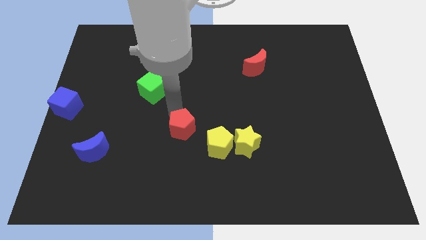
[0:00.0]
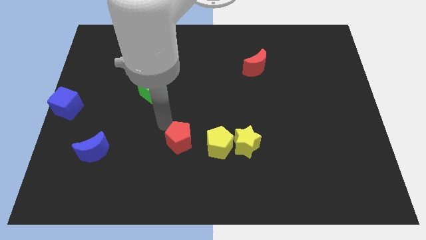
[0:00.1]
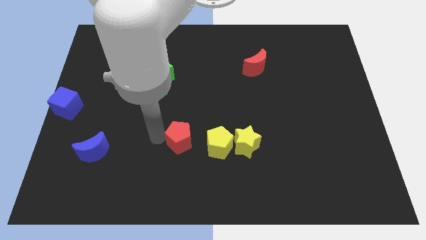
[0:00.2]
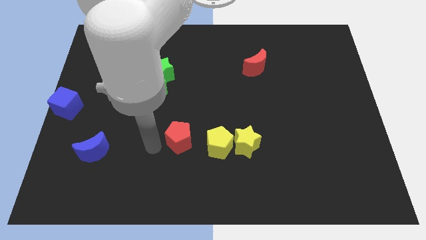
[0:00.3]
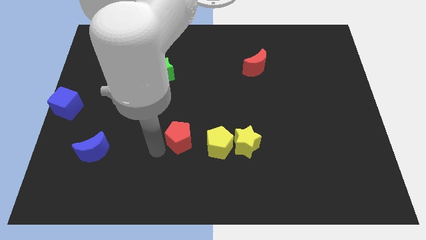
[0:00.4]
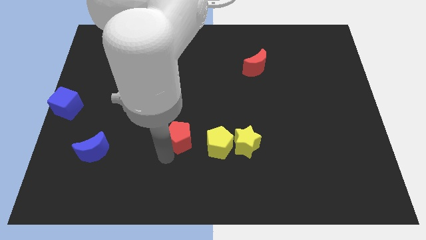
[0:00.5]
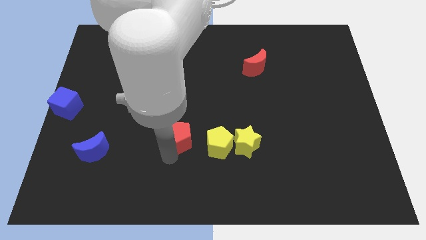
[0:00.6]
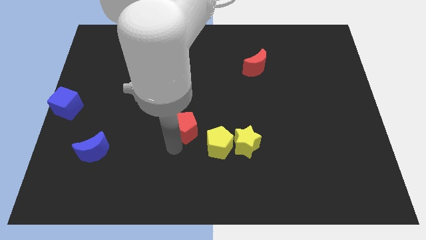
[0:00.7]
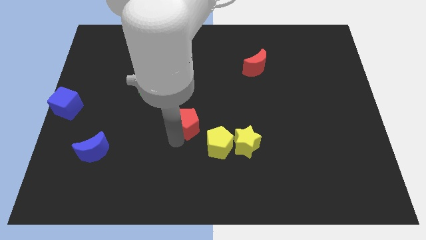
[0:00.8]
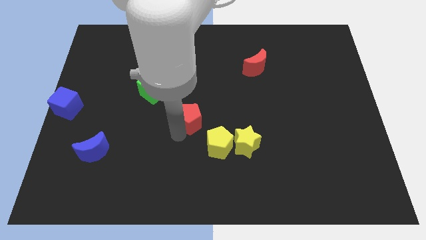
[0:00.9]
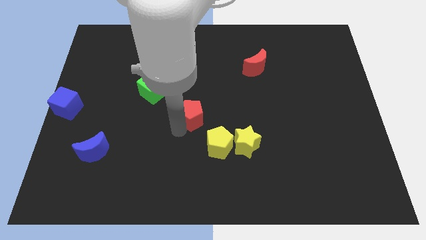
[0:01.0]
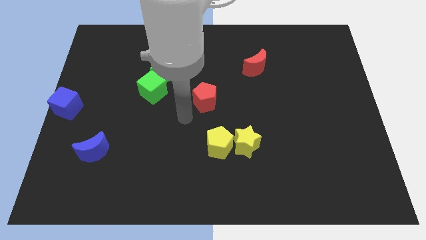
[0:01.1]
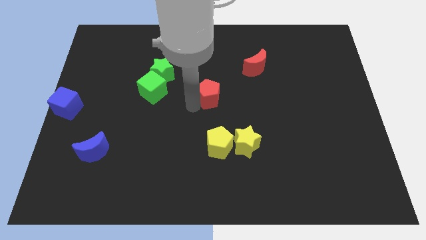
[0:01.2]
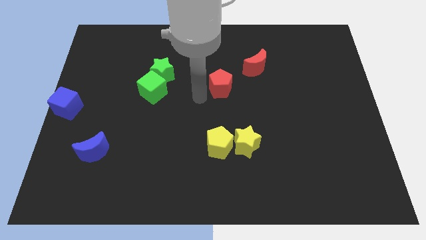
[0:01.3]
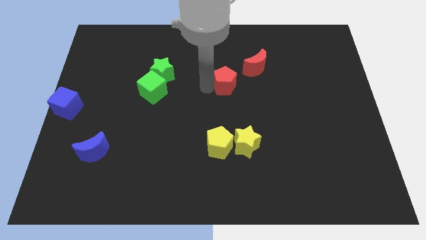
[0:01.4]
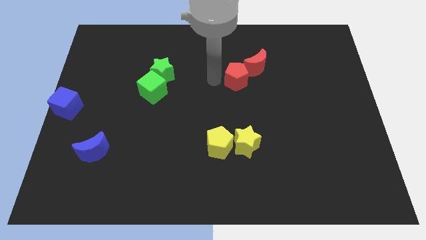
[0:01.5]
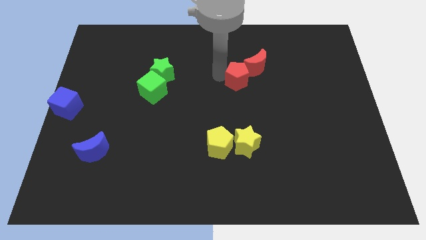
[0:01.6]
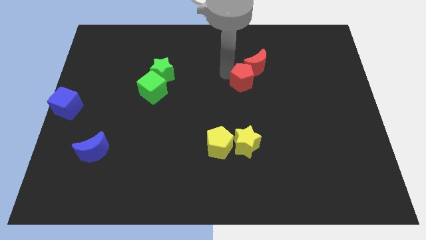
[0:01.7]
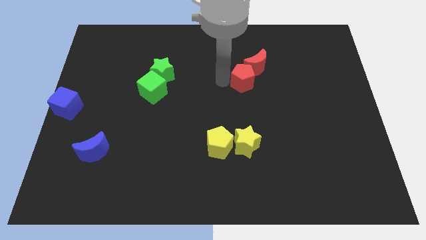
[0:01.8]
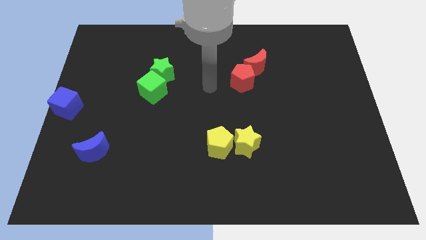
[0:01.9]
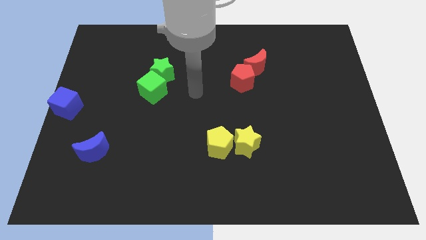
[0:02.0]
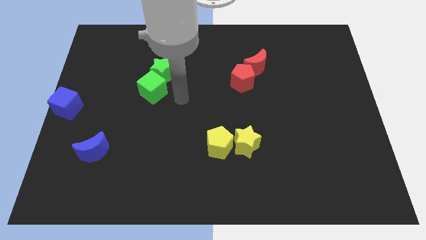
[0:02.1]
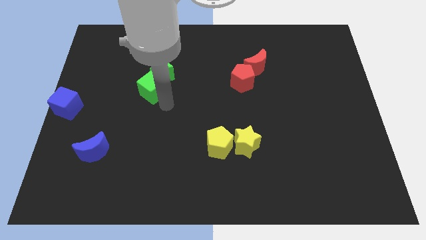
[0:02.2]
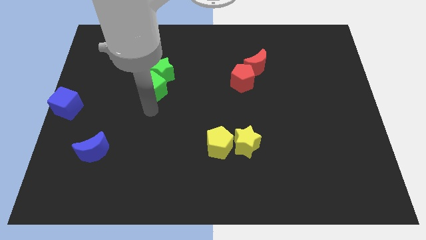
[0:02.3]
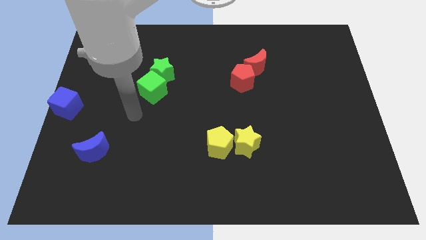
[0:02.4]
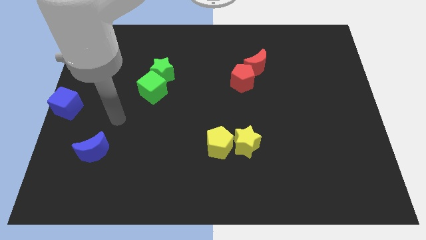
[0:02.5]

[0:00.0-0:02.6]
place the red pentagon to the left bottom of the red crescent

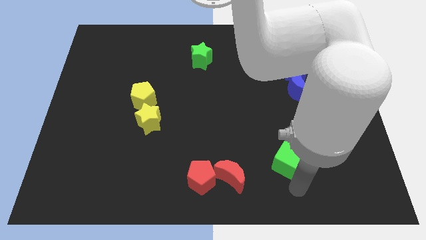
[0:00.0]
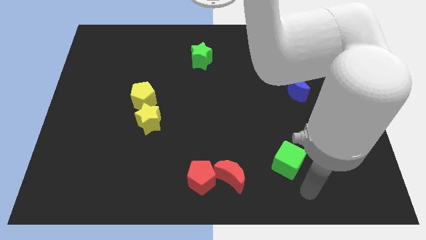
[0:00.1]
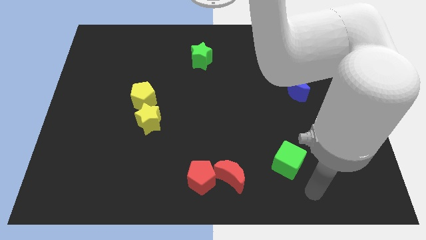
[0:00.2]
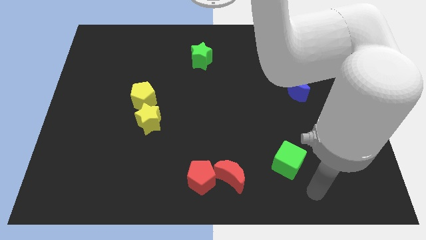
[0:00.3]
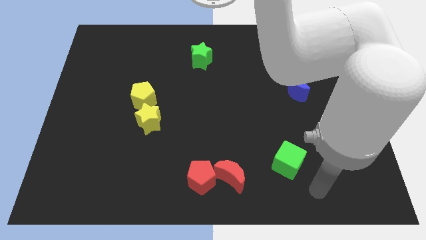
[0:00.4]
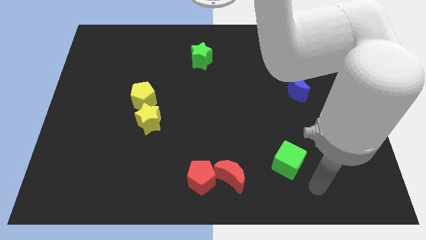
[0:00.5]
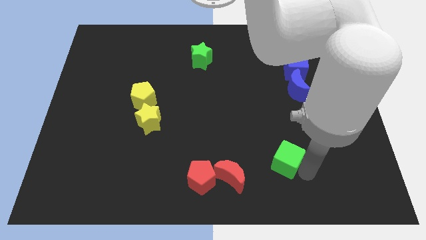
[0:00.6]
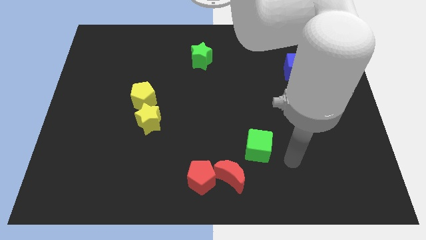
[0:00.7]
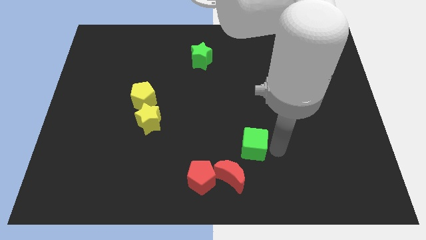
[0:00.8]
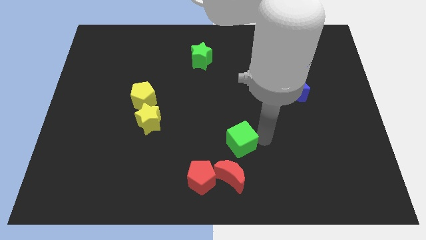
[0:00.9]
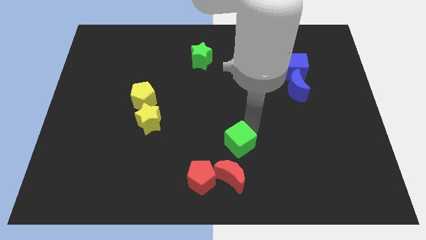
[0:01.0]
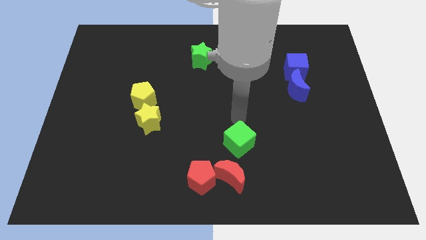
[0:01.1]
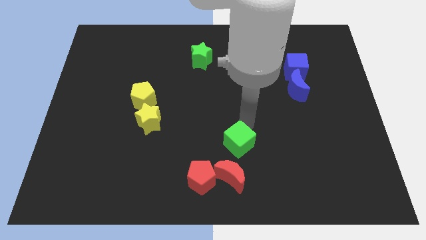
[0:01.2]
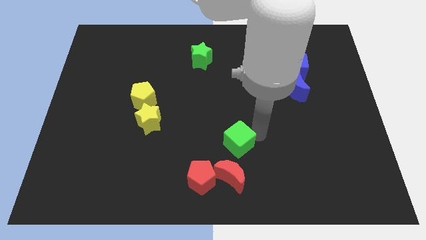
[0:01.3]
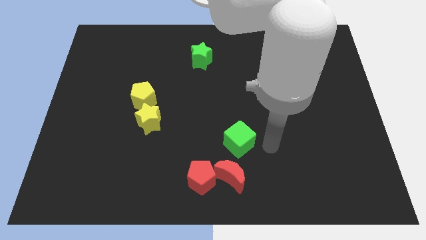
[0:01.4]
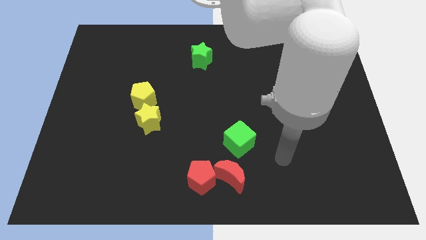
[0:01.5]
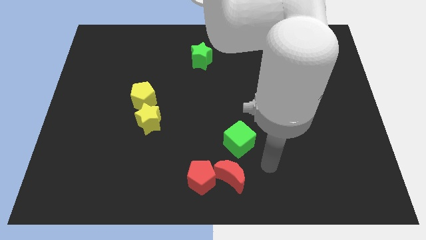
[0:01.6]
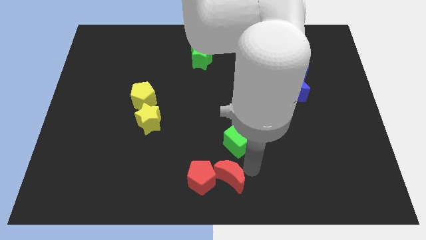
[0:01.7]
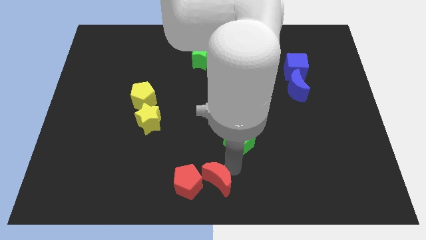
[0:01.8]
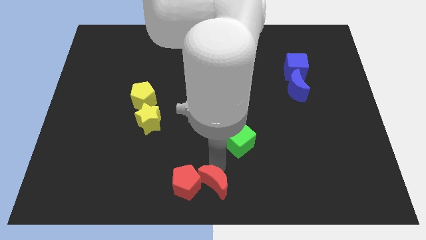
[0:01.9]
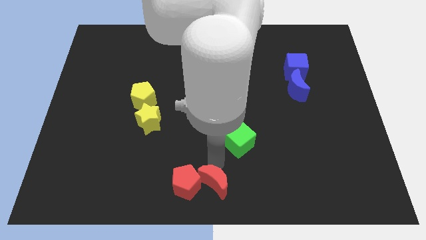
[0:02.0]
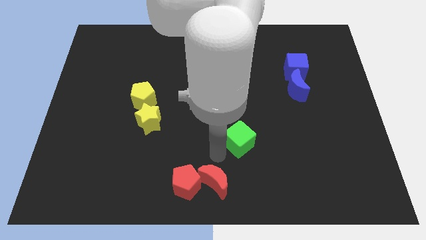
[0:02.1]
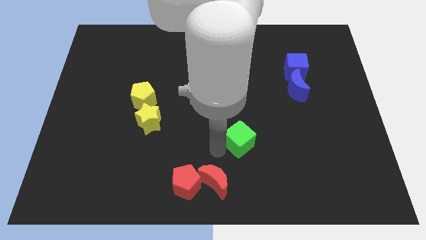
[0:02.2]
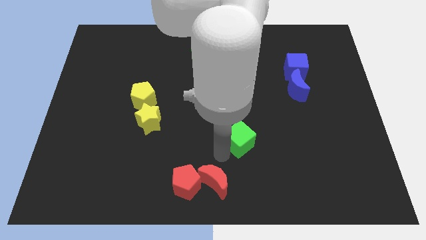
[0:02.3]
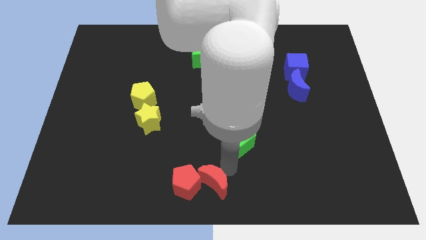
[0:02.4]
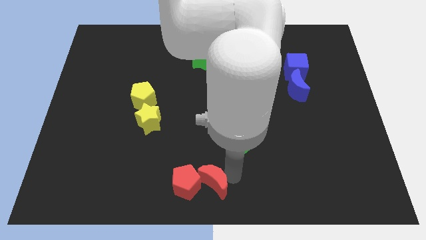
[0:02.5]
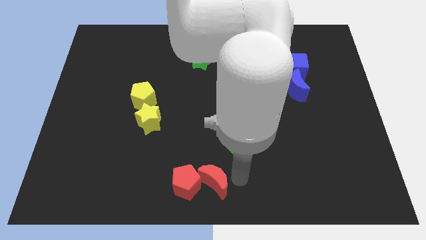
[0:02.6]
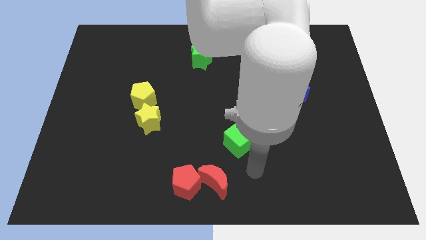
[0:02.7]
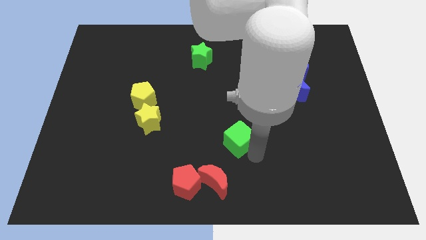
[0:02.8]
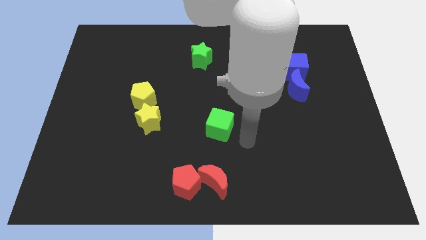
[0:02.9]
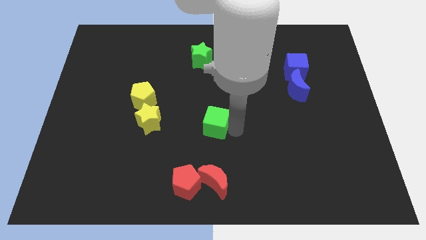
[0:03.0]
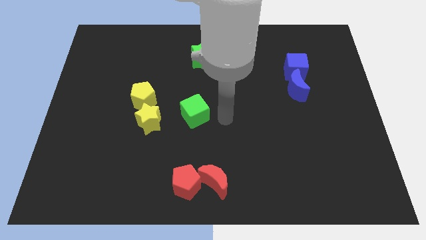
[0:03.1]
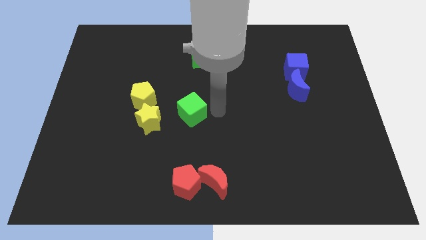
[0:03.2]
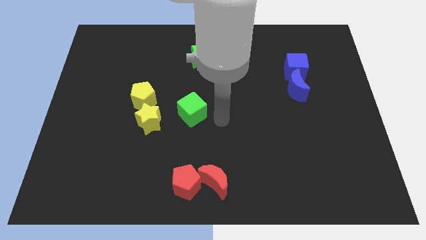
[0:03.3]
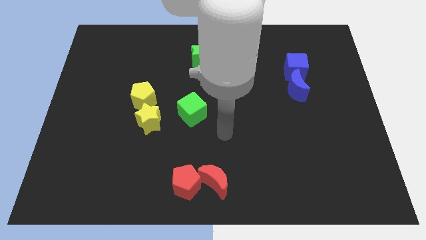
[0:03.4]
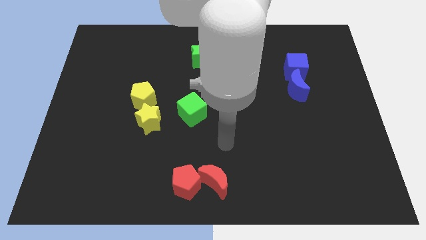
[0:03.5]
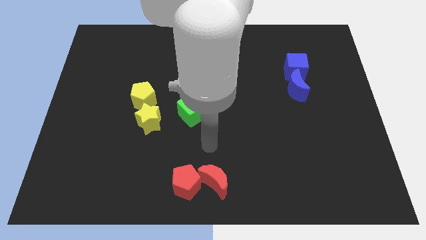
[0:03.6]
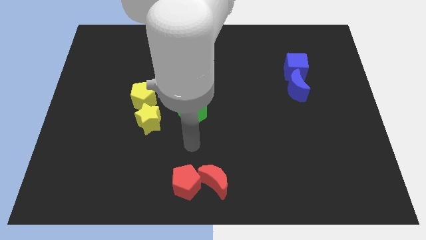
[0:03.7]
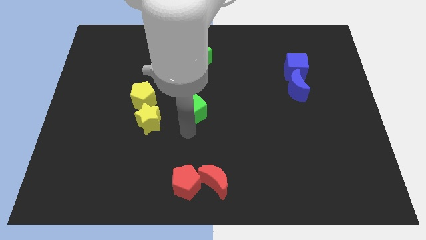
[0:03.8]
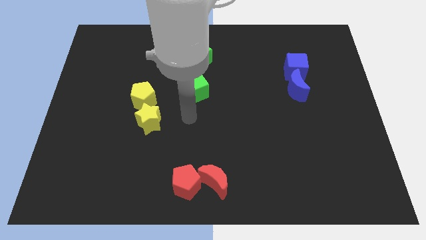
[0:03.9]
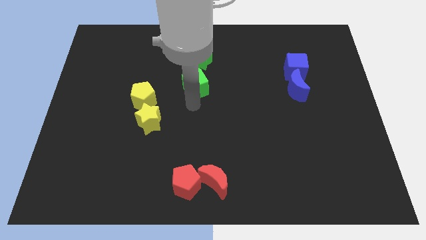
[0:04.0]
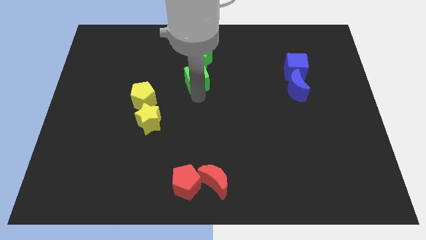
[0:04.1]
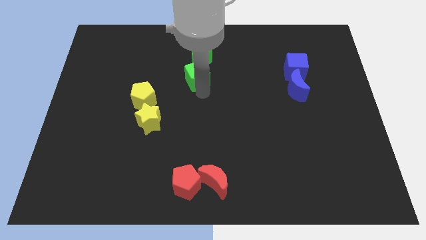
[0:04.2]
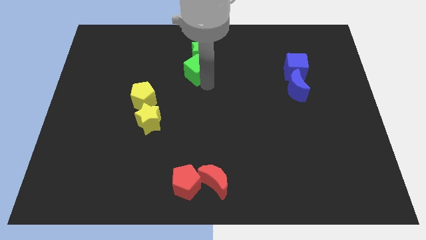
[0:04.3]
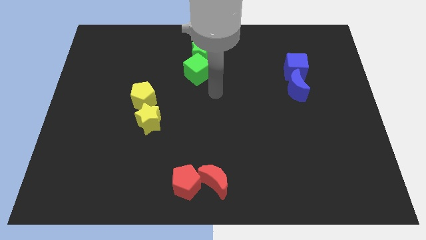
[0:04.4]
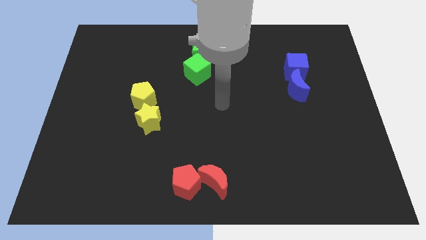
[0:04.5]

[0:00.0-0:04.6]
push the green cube below the green star

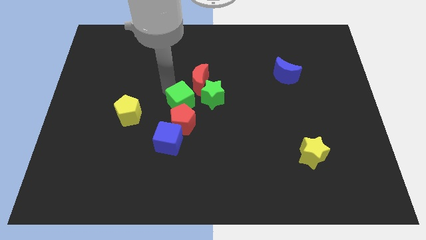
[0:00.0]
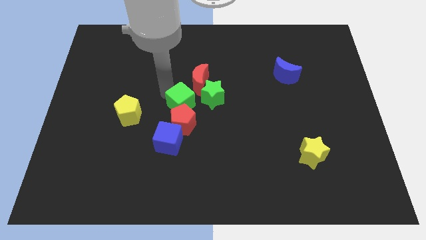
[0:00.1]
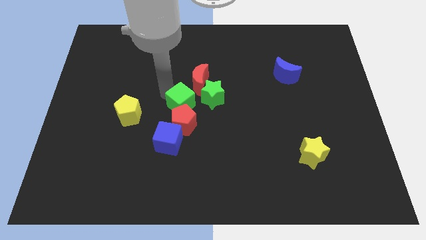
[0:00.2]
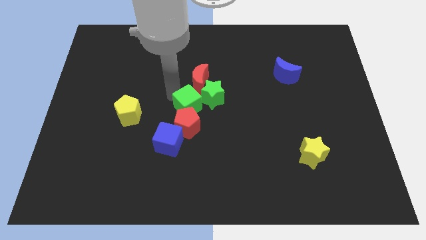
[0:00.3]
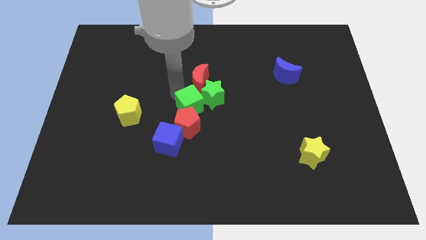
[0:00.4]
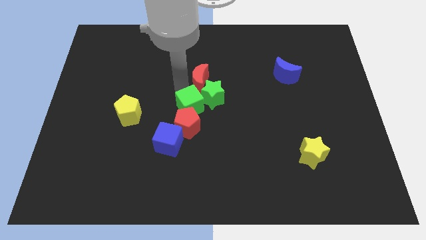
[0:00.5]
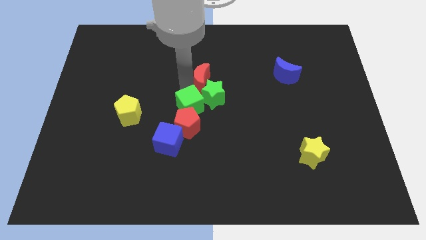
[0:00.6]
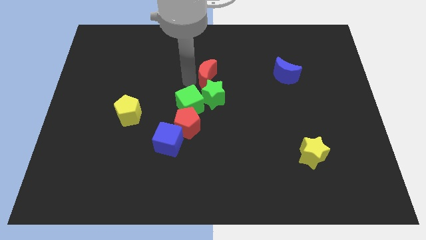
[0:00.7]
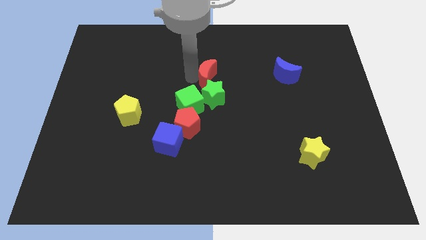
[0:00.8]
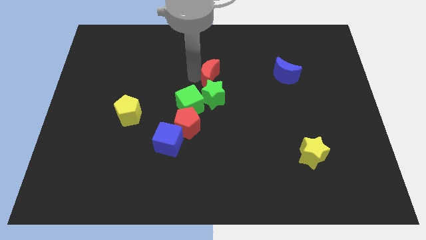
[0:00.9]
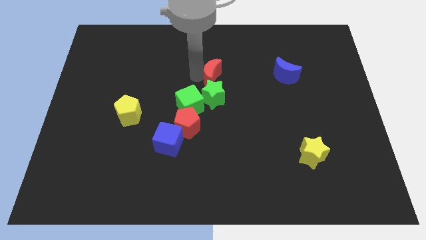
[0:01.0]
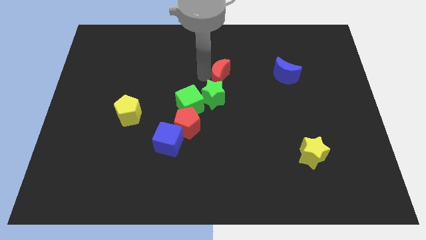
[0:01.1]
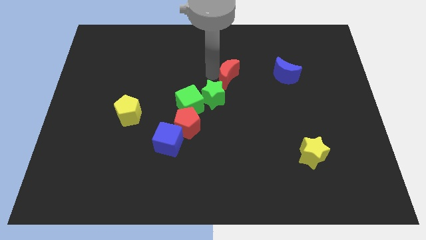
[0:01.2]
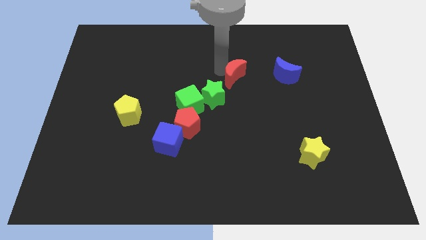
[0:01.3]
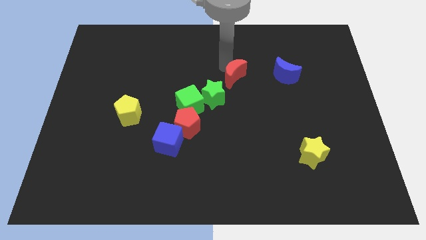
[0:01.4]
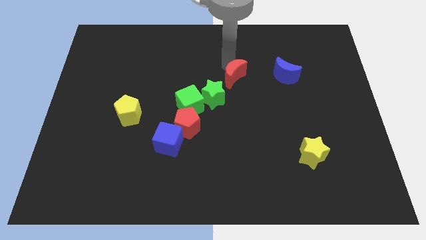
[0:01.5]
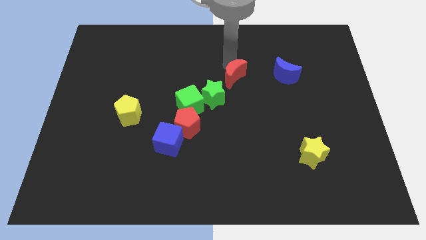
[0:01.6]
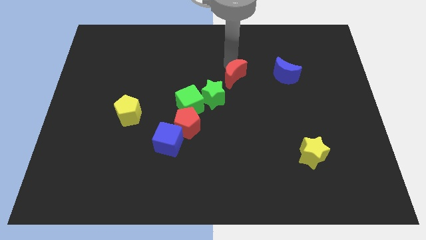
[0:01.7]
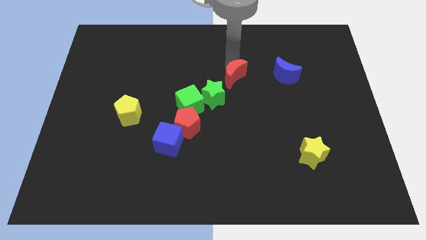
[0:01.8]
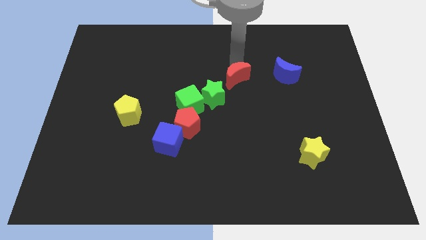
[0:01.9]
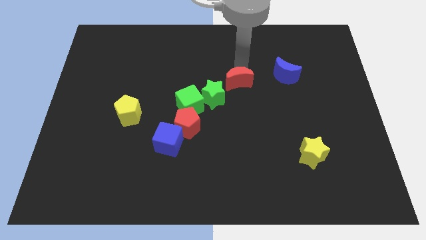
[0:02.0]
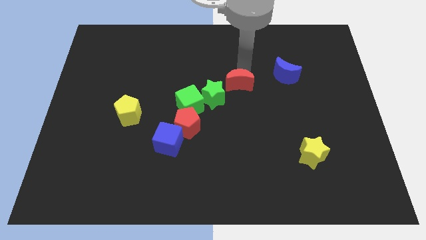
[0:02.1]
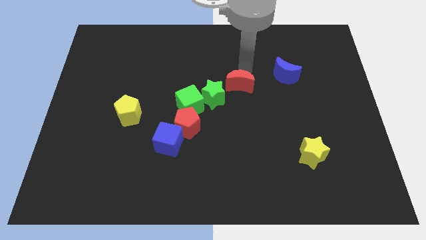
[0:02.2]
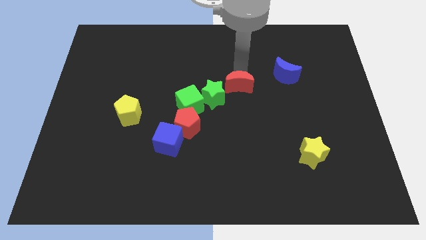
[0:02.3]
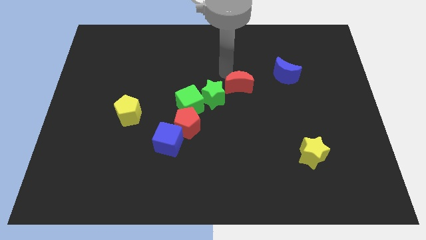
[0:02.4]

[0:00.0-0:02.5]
place the red moon diagonally at the bottom left of the blue moon
